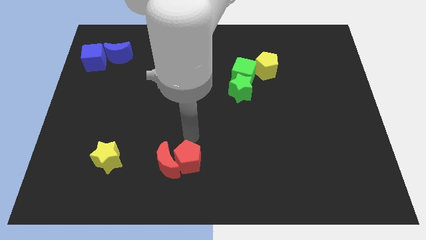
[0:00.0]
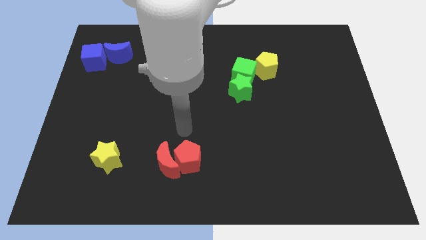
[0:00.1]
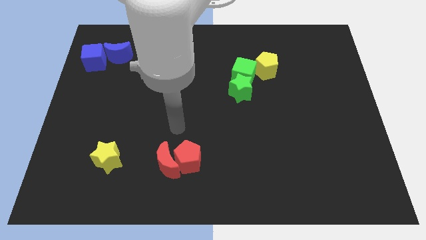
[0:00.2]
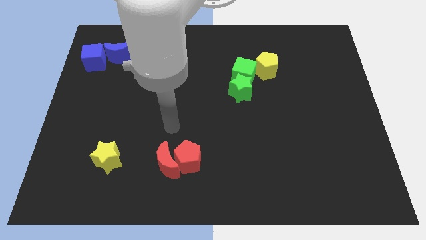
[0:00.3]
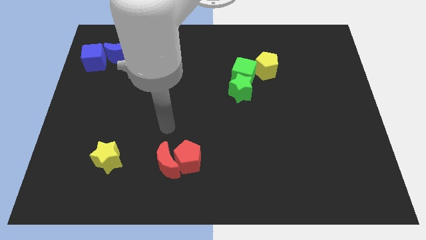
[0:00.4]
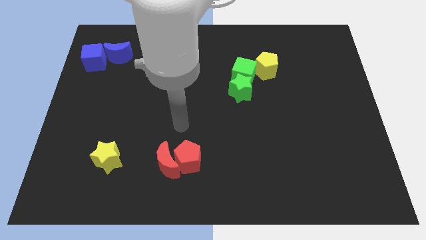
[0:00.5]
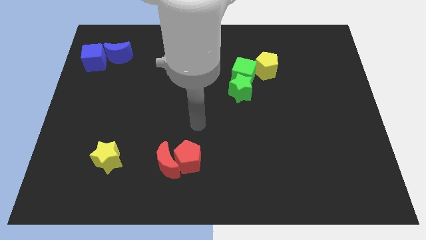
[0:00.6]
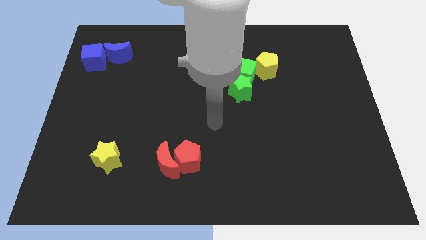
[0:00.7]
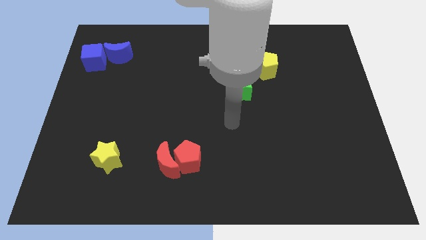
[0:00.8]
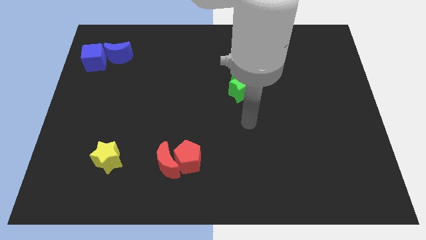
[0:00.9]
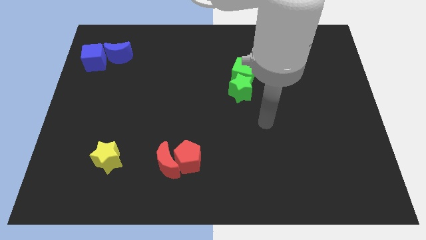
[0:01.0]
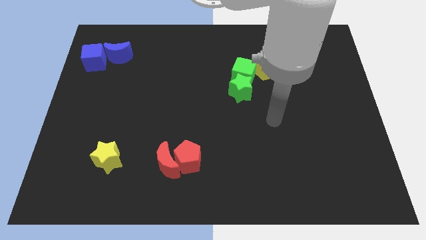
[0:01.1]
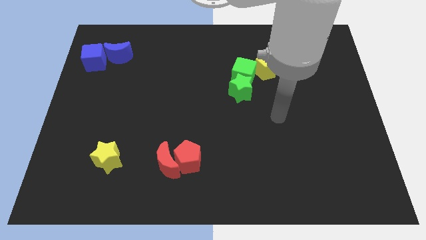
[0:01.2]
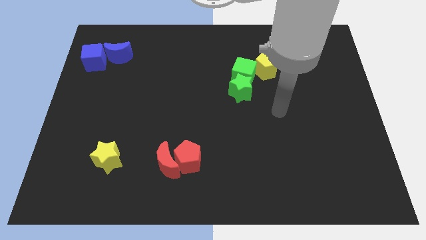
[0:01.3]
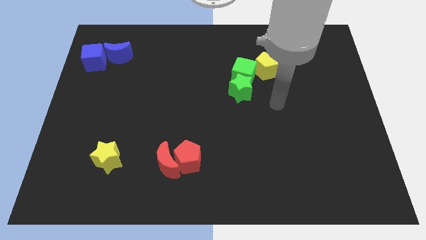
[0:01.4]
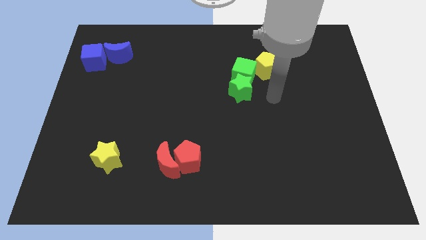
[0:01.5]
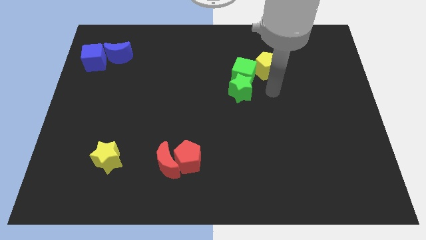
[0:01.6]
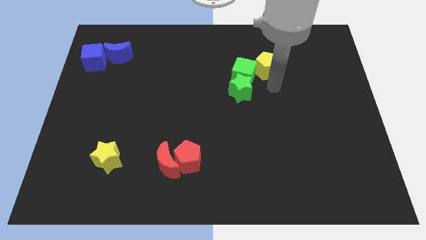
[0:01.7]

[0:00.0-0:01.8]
move the arm to the bottom of the yellow pentagon

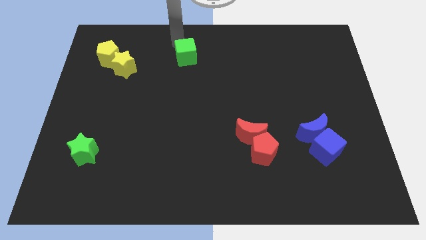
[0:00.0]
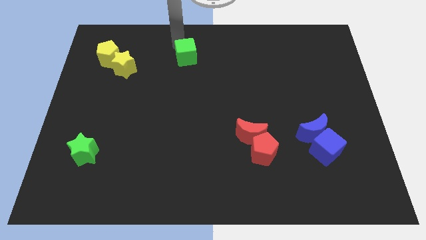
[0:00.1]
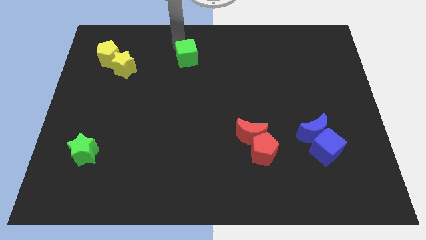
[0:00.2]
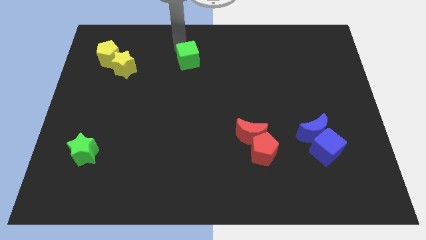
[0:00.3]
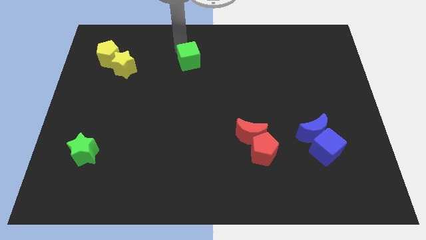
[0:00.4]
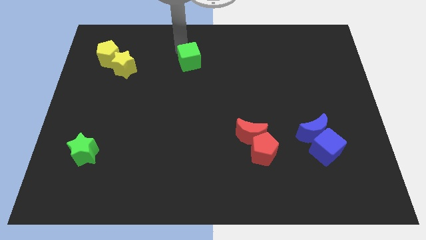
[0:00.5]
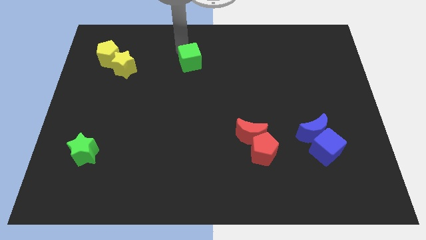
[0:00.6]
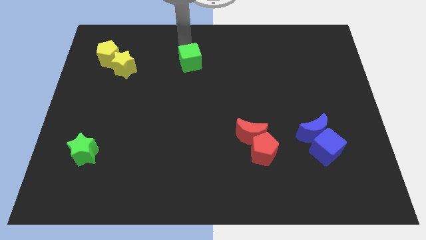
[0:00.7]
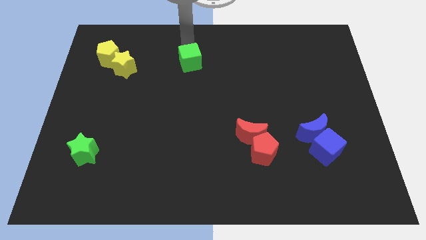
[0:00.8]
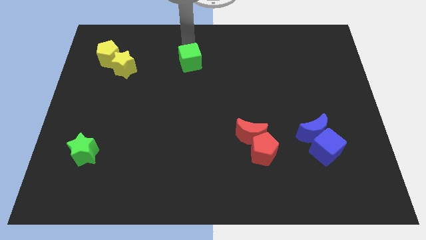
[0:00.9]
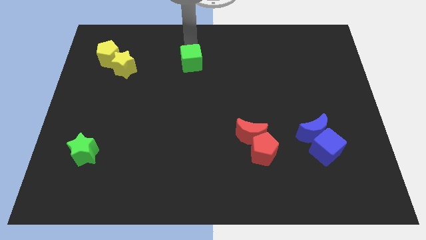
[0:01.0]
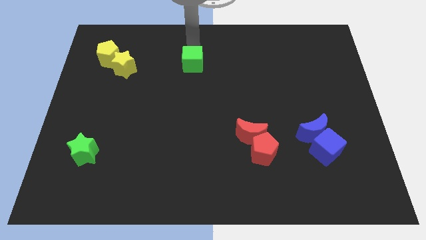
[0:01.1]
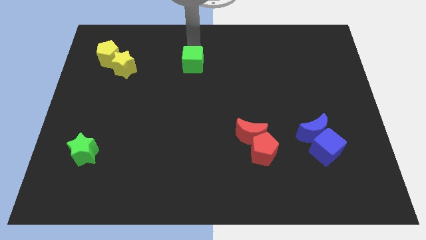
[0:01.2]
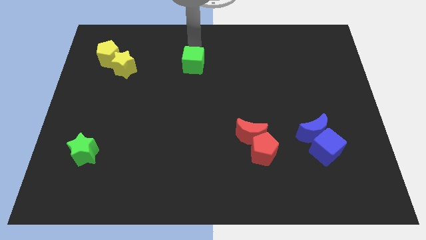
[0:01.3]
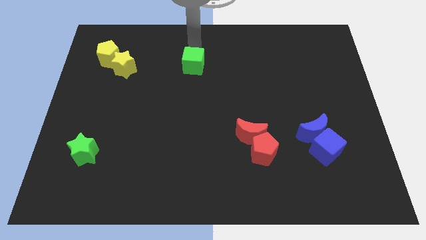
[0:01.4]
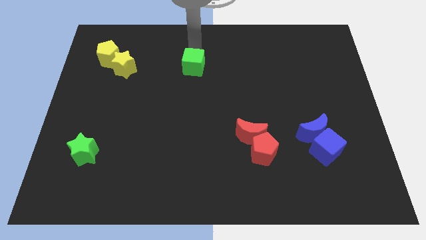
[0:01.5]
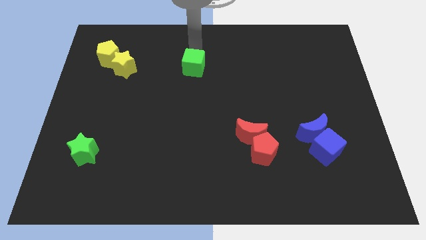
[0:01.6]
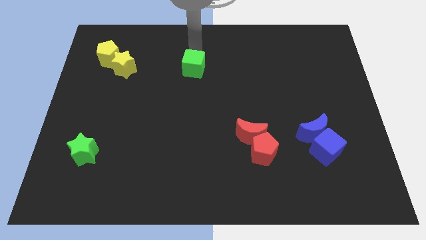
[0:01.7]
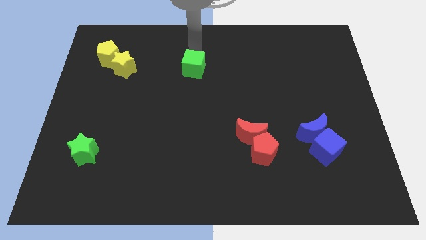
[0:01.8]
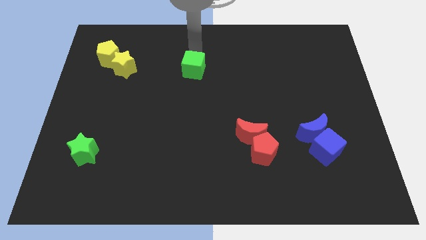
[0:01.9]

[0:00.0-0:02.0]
push green cube slightly towards downwards

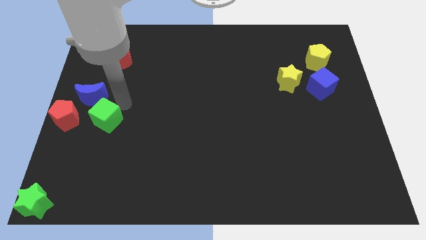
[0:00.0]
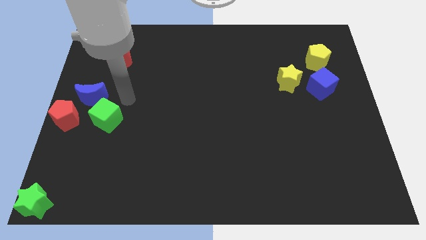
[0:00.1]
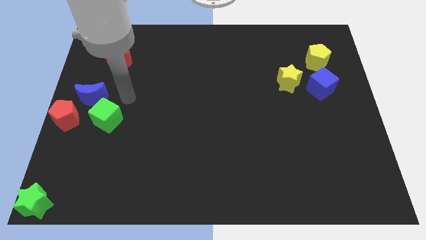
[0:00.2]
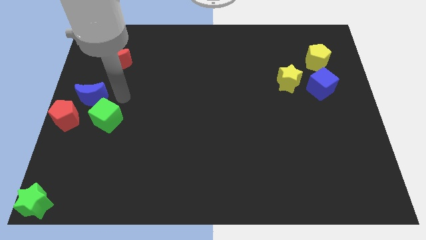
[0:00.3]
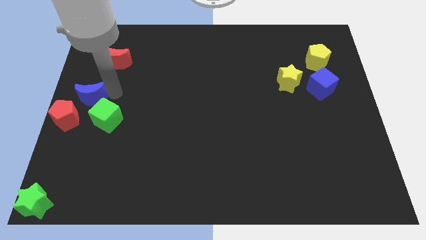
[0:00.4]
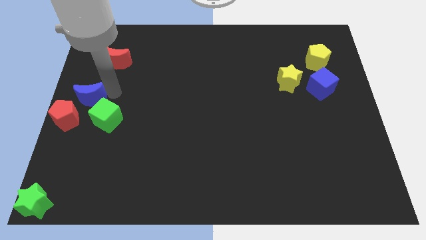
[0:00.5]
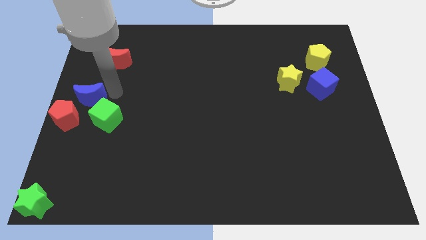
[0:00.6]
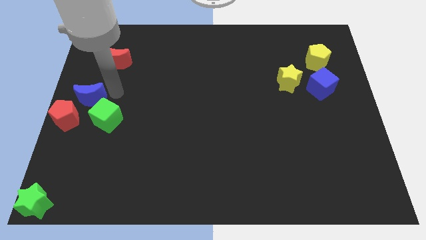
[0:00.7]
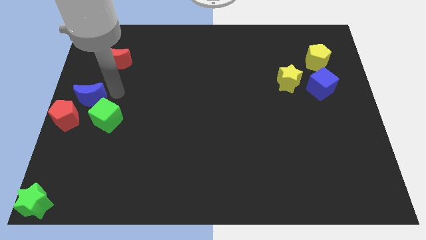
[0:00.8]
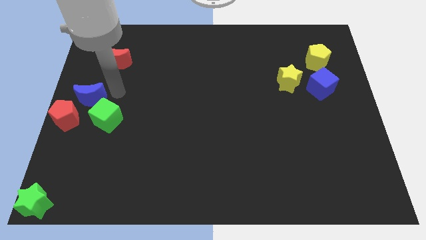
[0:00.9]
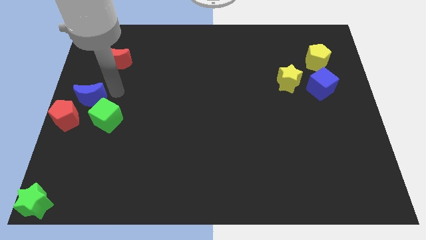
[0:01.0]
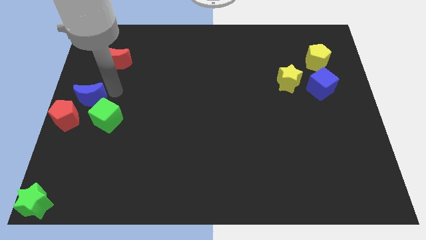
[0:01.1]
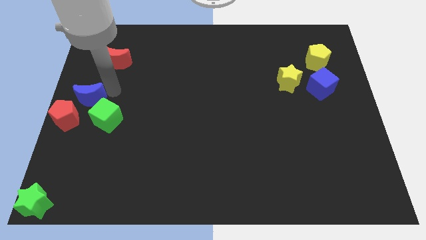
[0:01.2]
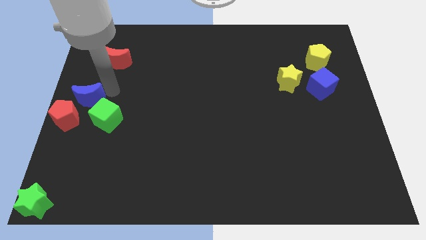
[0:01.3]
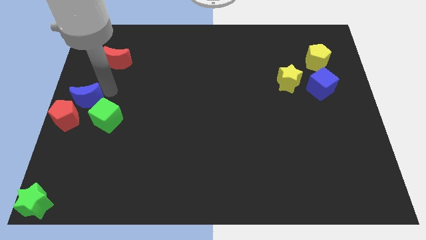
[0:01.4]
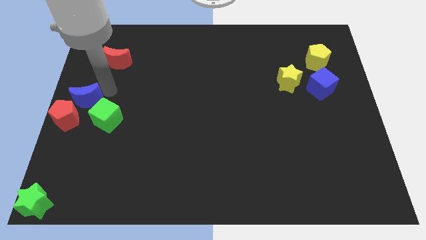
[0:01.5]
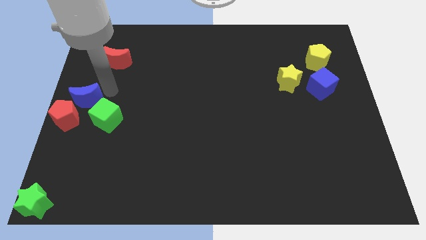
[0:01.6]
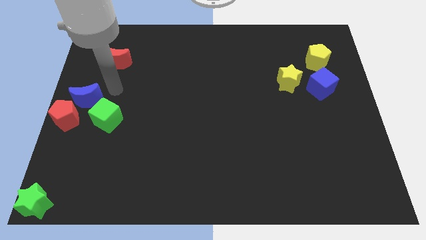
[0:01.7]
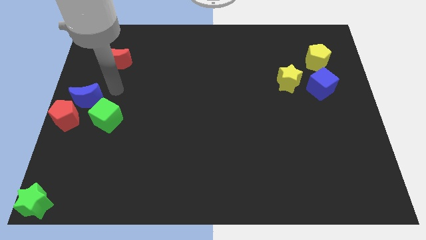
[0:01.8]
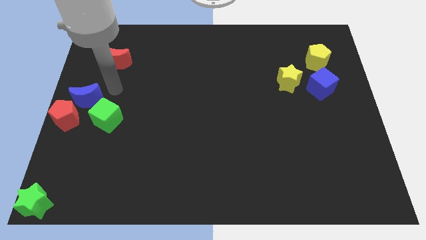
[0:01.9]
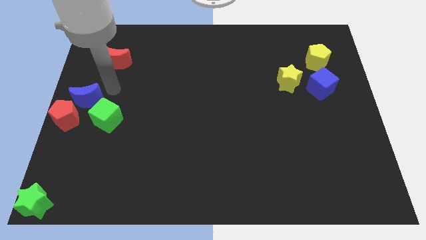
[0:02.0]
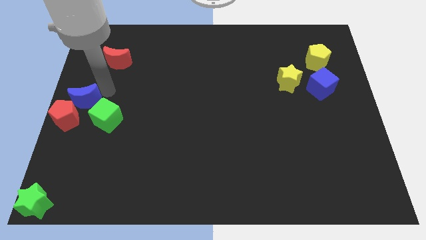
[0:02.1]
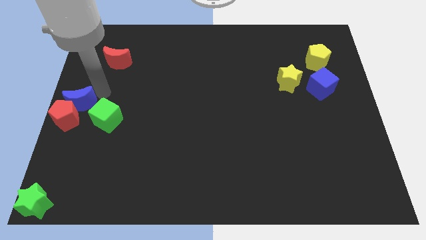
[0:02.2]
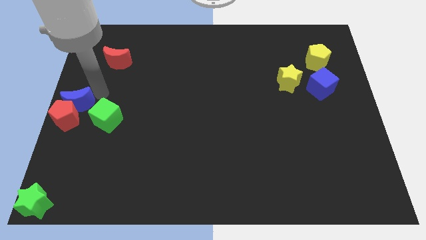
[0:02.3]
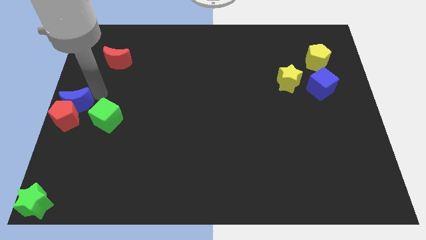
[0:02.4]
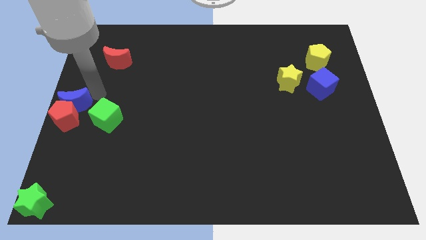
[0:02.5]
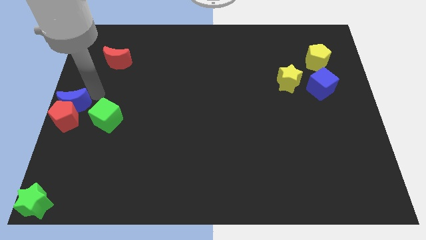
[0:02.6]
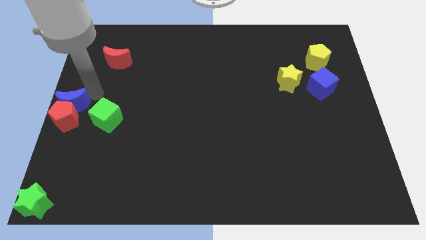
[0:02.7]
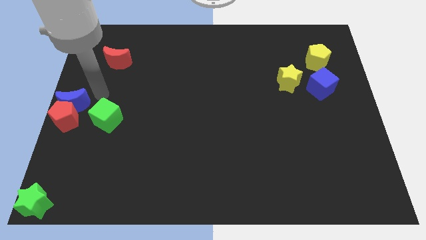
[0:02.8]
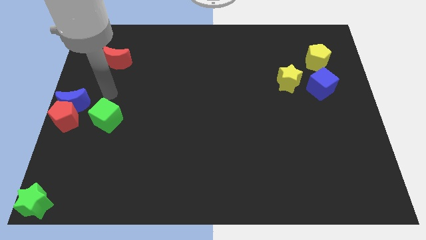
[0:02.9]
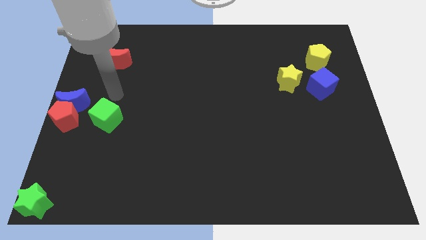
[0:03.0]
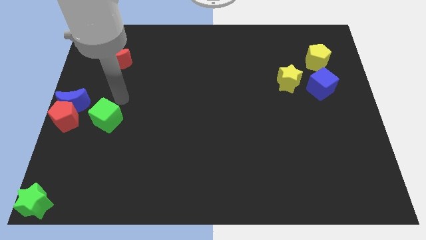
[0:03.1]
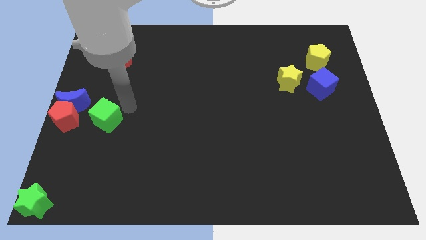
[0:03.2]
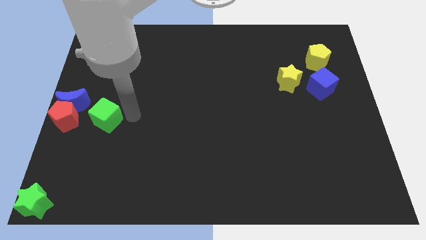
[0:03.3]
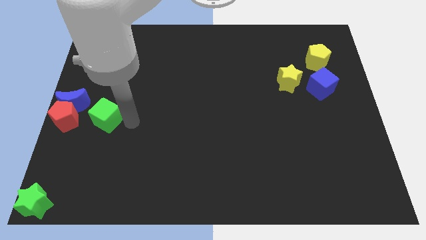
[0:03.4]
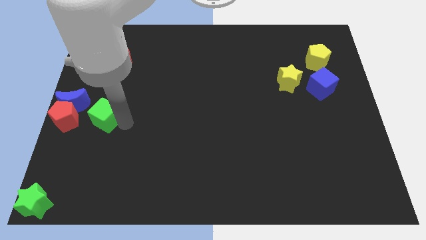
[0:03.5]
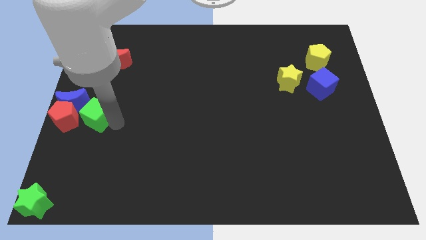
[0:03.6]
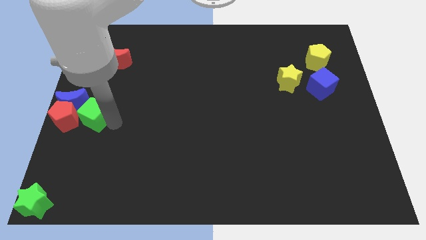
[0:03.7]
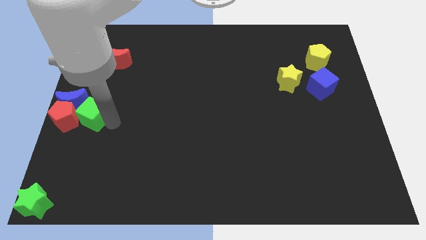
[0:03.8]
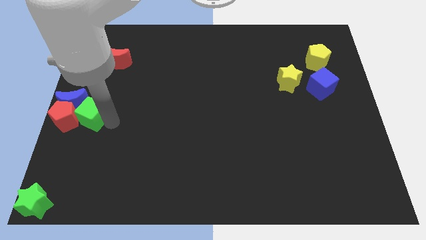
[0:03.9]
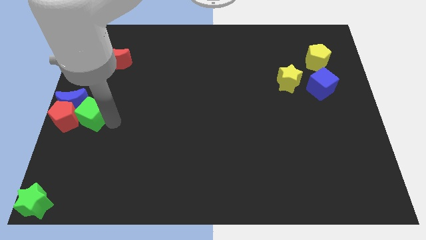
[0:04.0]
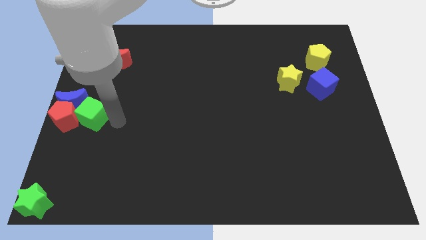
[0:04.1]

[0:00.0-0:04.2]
push the green cube close to the red pentagon

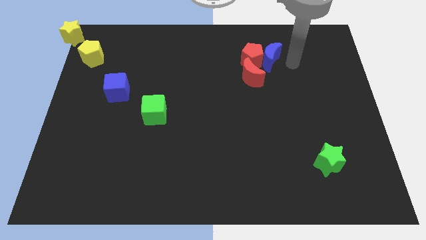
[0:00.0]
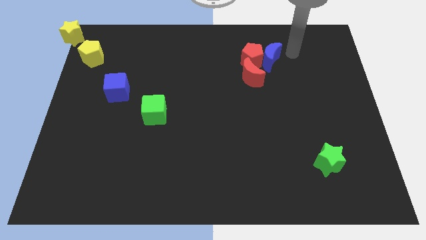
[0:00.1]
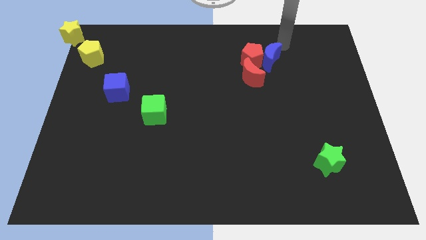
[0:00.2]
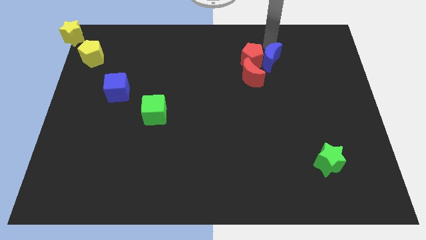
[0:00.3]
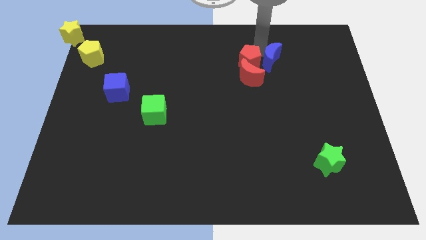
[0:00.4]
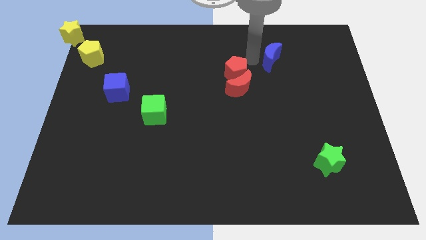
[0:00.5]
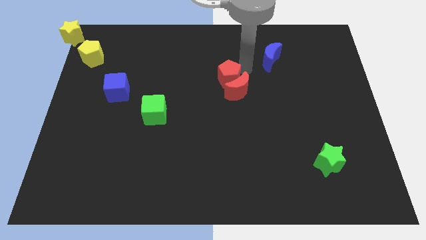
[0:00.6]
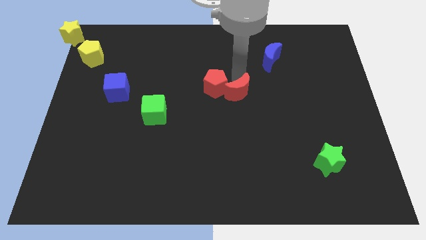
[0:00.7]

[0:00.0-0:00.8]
separate the blue crescent and the red blocks

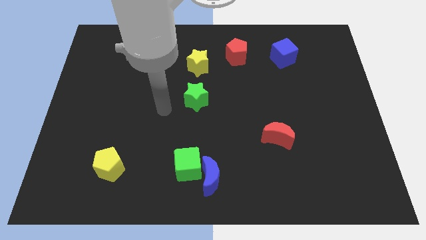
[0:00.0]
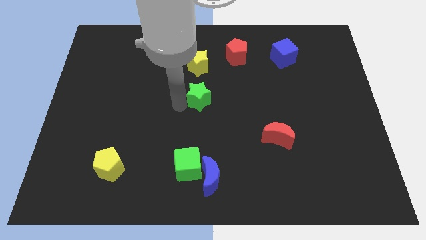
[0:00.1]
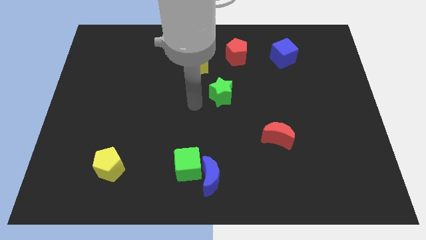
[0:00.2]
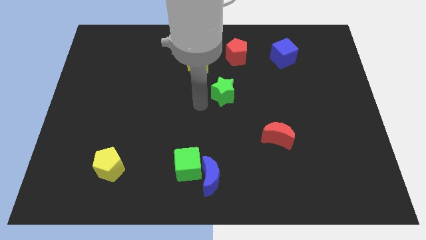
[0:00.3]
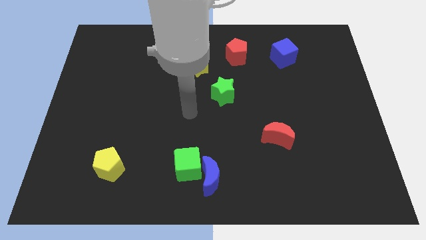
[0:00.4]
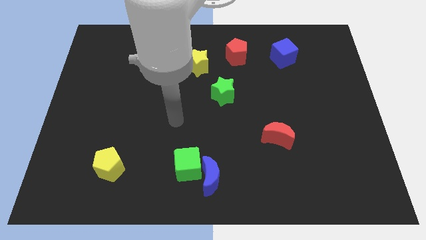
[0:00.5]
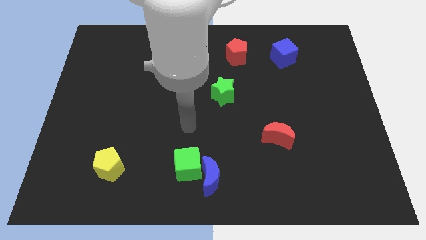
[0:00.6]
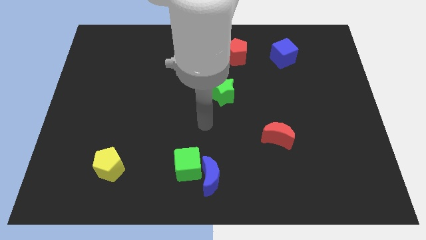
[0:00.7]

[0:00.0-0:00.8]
place the green star diagonally in between the red moon and yellow star
